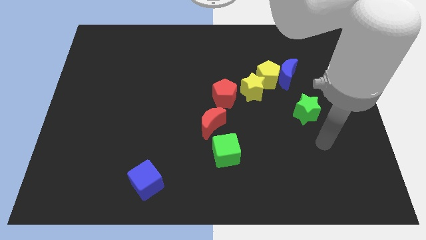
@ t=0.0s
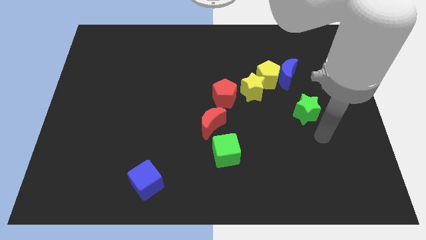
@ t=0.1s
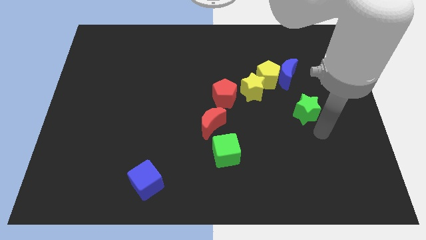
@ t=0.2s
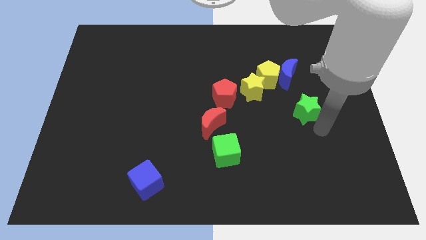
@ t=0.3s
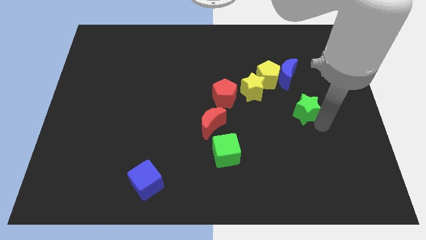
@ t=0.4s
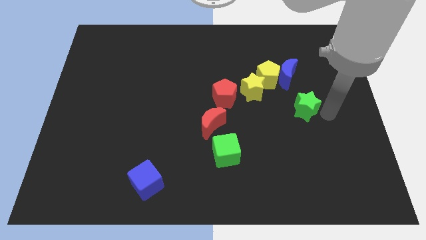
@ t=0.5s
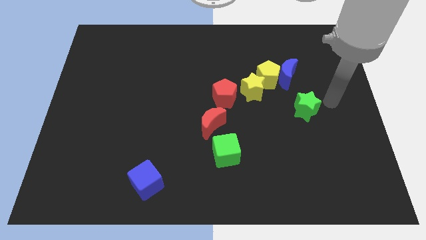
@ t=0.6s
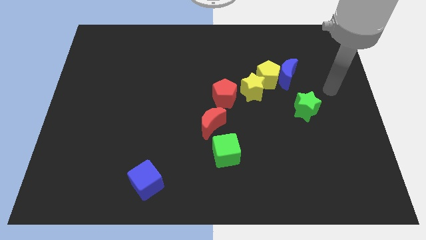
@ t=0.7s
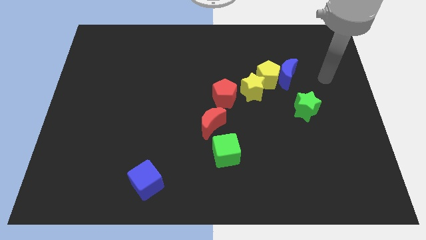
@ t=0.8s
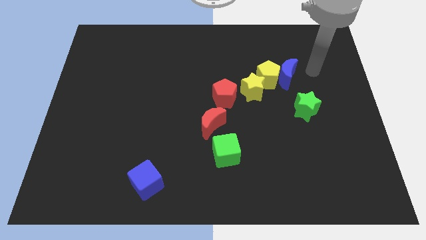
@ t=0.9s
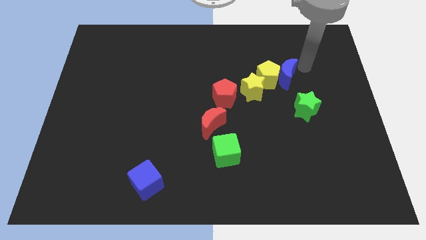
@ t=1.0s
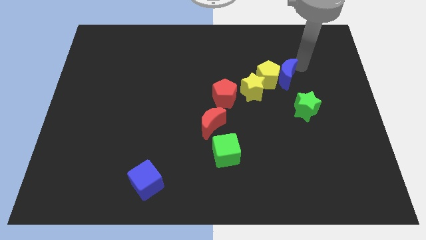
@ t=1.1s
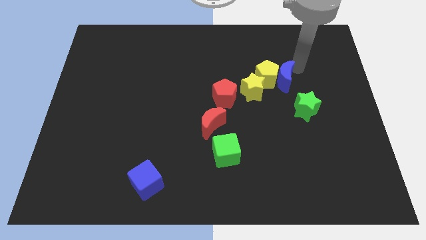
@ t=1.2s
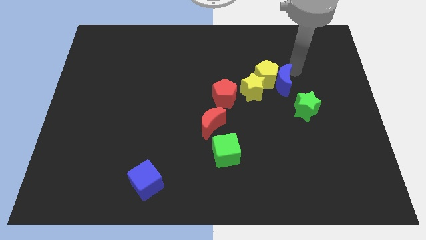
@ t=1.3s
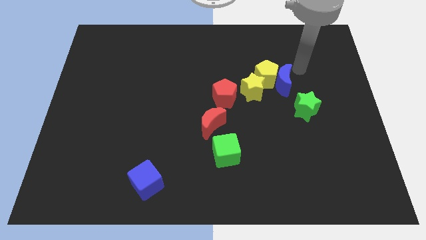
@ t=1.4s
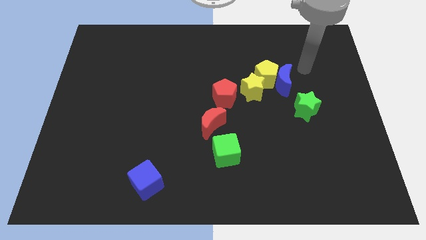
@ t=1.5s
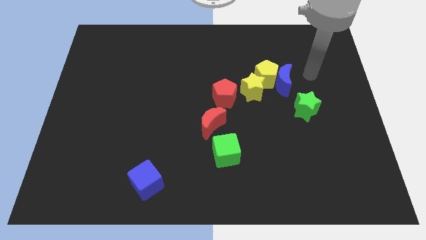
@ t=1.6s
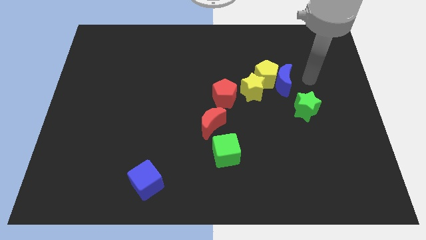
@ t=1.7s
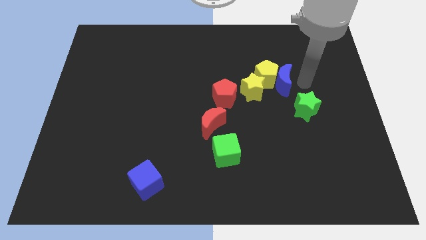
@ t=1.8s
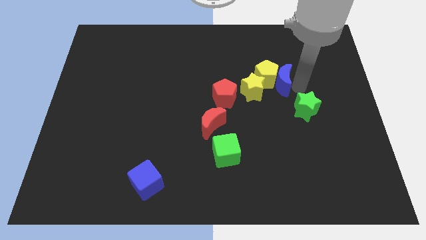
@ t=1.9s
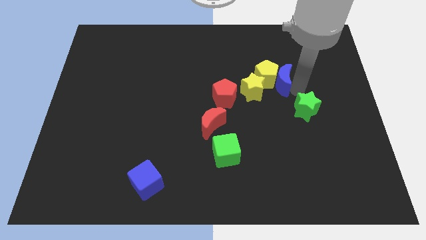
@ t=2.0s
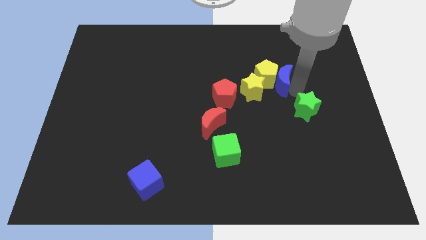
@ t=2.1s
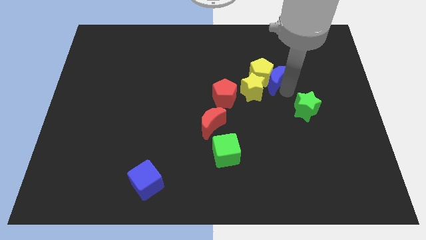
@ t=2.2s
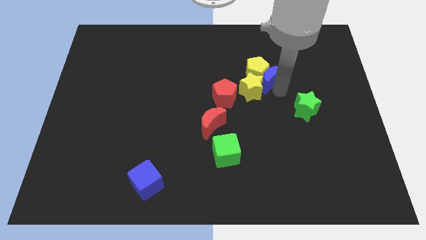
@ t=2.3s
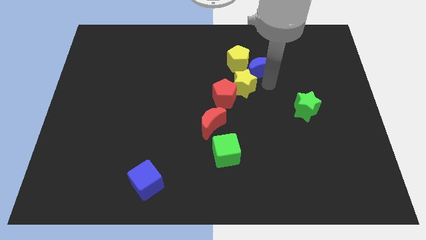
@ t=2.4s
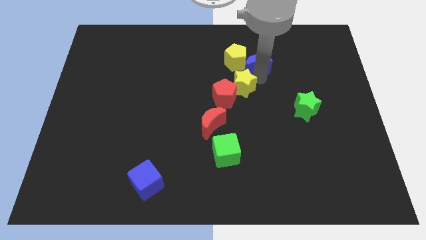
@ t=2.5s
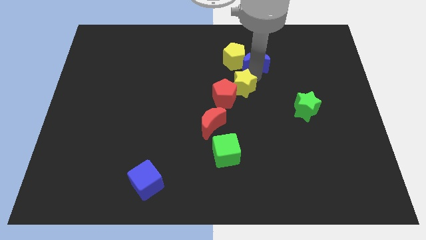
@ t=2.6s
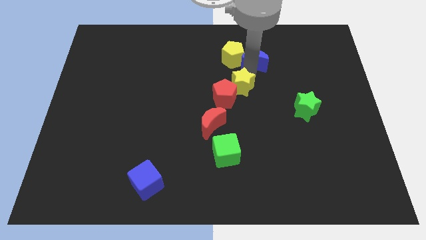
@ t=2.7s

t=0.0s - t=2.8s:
move your arm and push the blue moon between yellow blocks

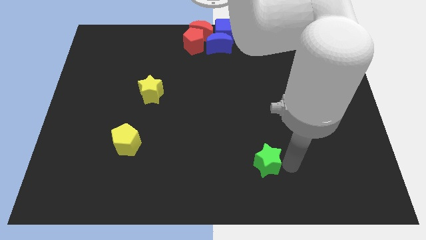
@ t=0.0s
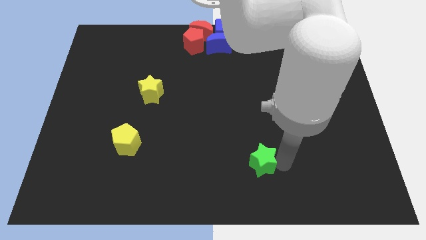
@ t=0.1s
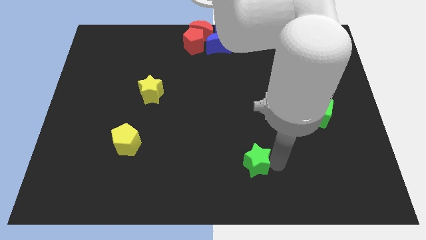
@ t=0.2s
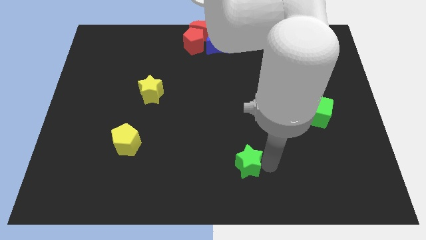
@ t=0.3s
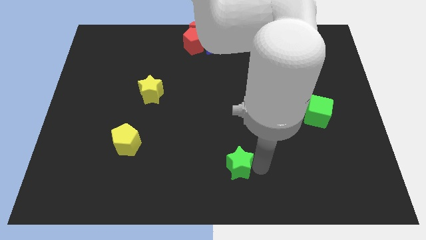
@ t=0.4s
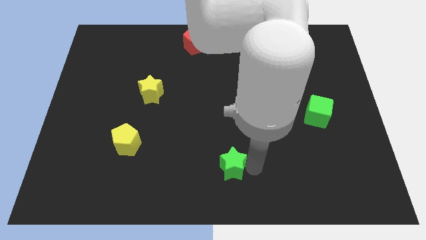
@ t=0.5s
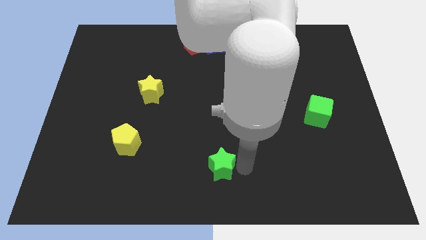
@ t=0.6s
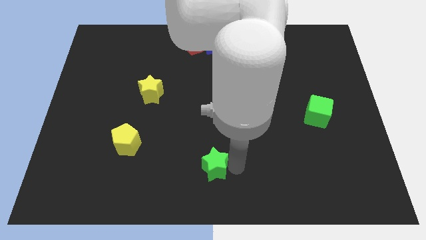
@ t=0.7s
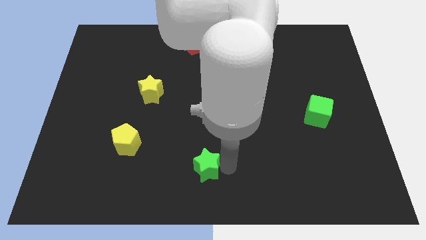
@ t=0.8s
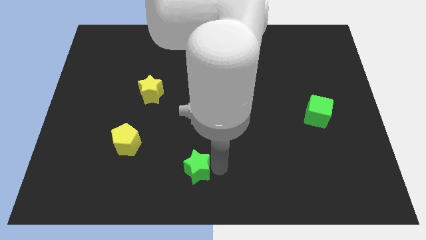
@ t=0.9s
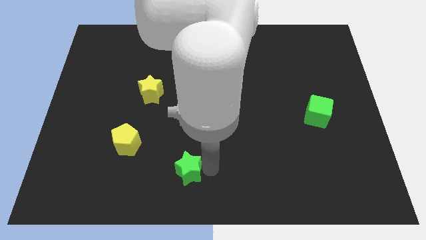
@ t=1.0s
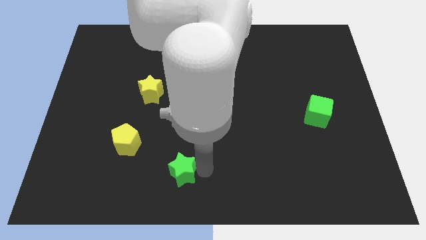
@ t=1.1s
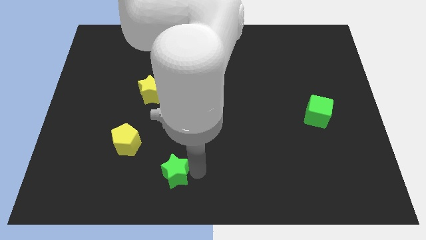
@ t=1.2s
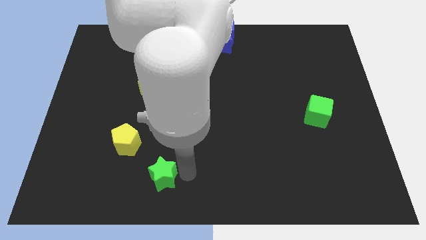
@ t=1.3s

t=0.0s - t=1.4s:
push green star diagonally right bottom of the yellow pentagon

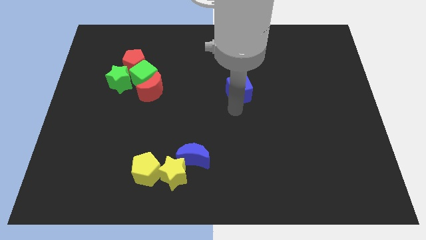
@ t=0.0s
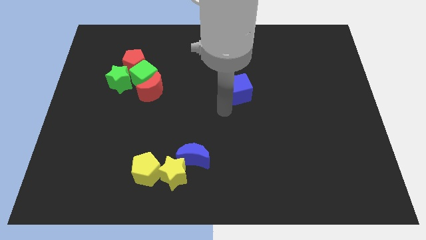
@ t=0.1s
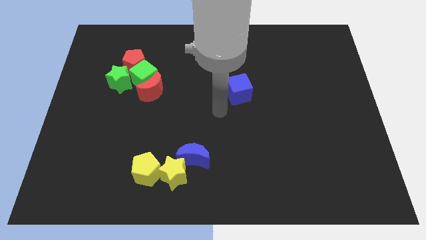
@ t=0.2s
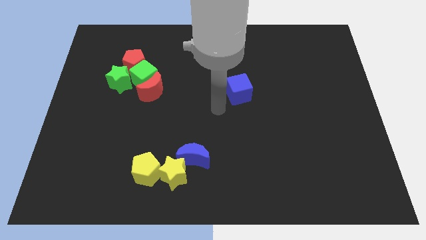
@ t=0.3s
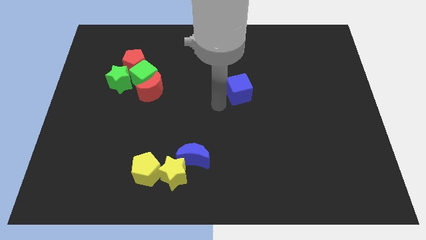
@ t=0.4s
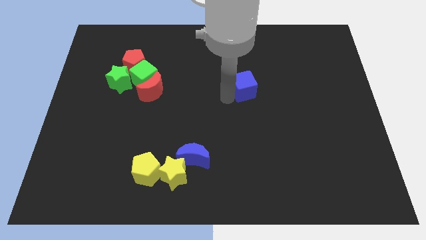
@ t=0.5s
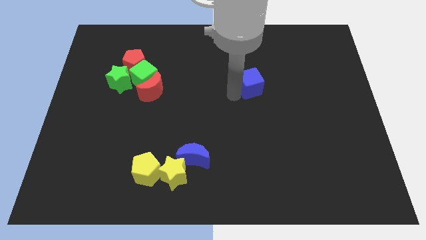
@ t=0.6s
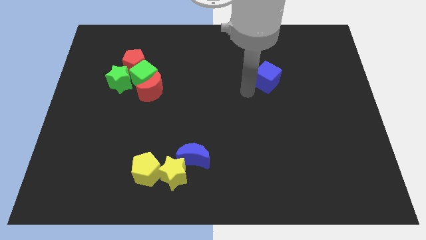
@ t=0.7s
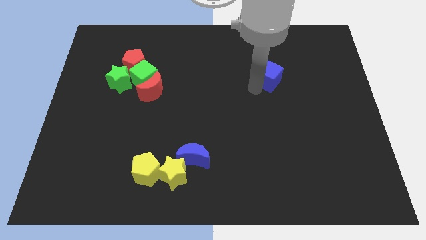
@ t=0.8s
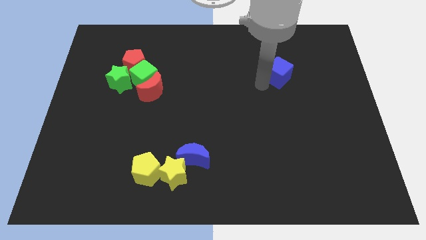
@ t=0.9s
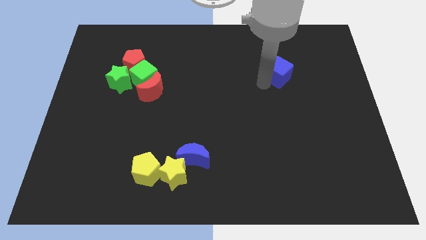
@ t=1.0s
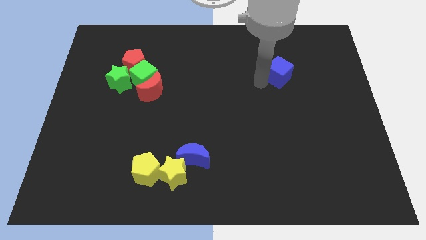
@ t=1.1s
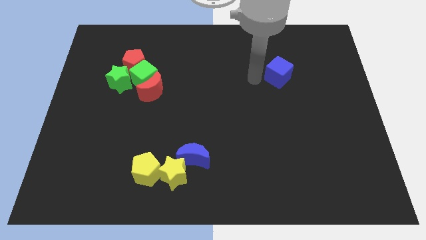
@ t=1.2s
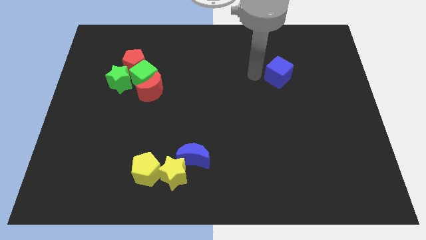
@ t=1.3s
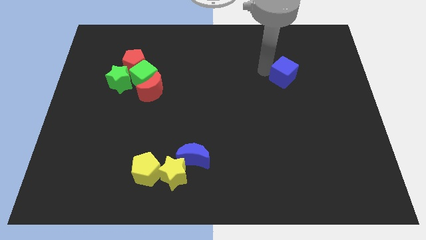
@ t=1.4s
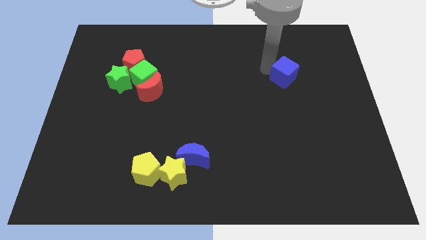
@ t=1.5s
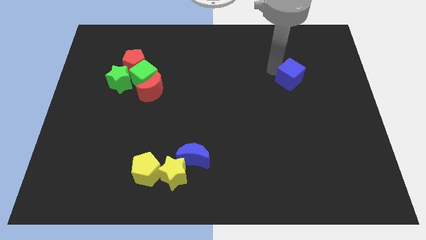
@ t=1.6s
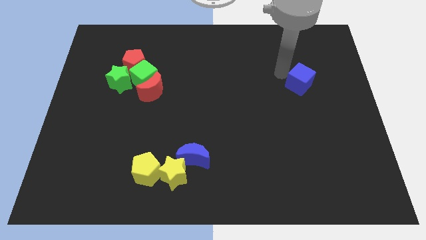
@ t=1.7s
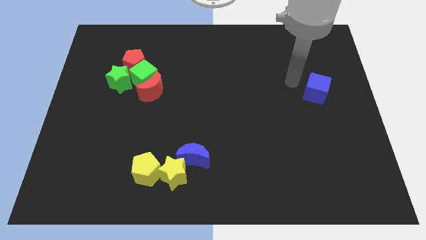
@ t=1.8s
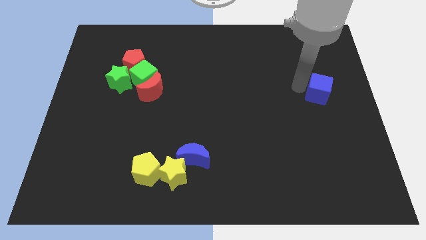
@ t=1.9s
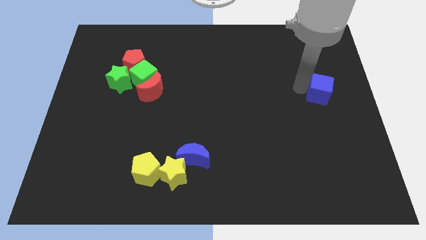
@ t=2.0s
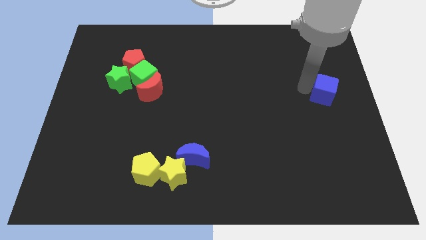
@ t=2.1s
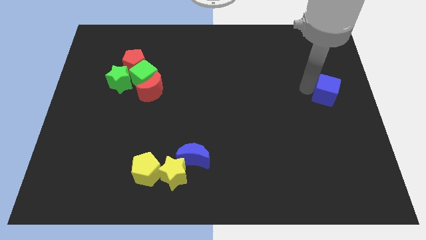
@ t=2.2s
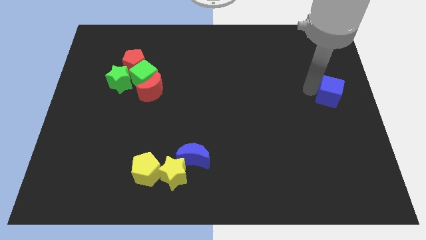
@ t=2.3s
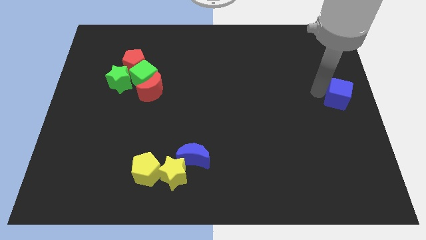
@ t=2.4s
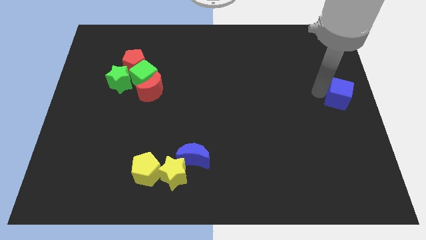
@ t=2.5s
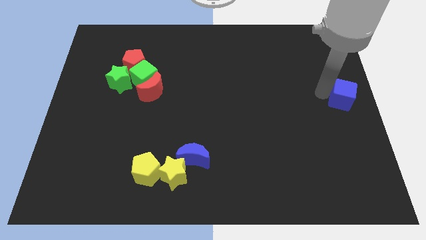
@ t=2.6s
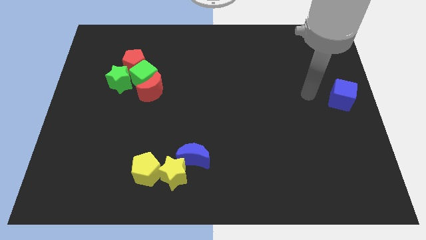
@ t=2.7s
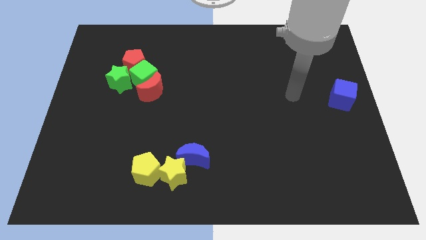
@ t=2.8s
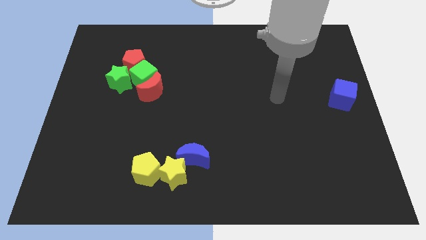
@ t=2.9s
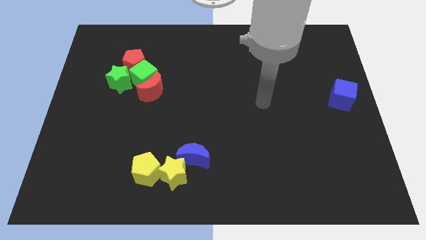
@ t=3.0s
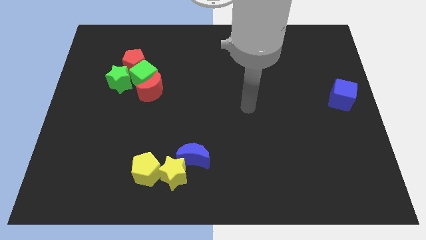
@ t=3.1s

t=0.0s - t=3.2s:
place the blue cube towards the middle right end of the board

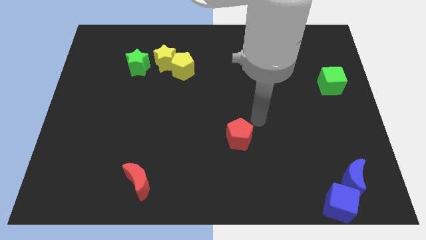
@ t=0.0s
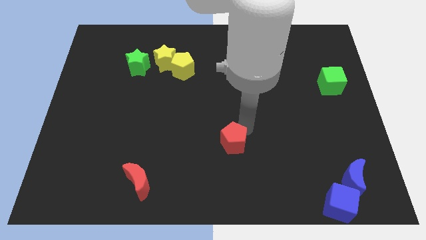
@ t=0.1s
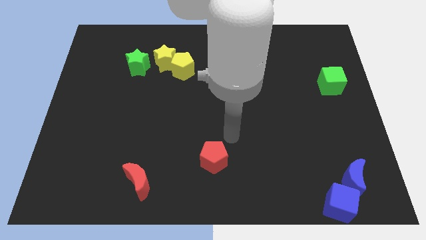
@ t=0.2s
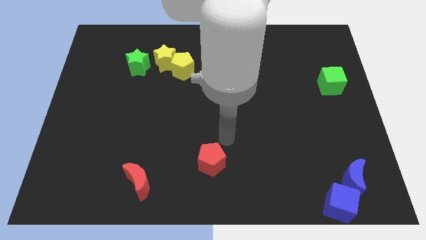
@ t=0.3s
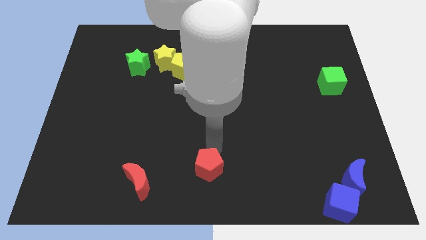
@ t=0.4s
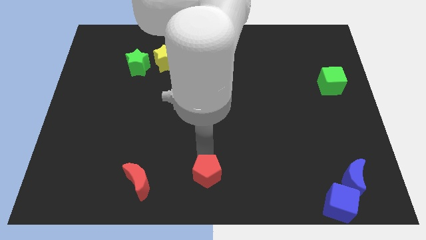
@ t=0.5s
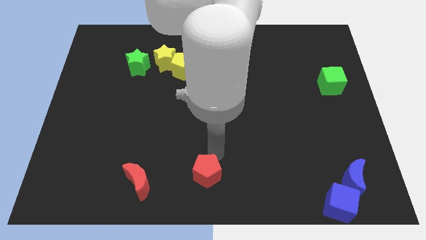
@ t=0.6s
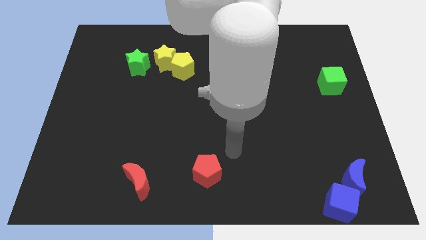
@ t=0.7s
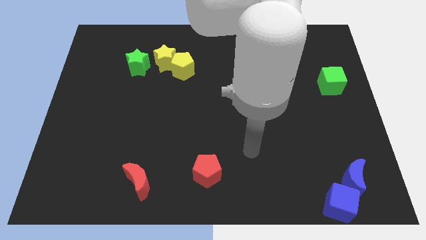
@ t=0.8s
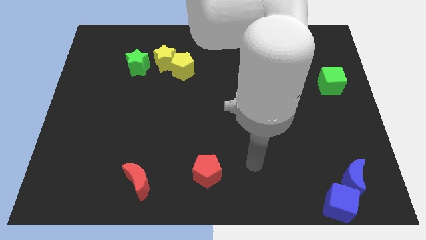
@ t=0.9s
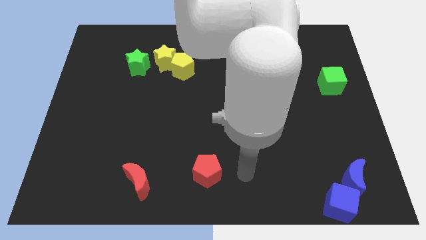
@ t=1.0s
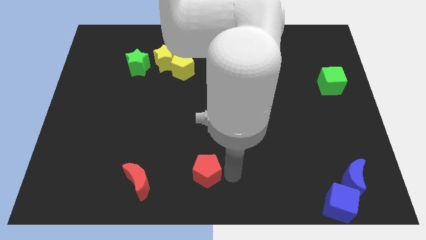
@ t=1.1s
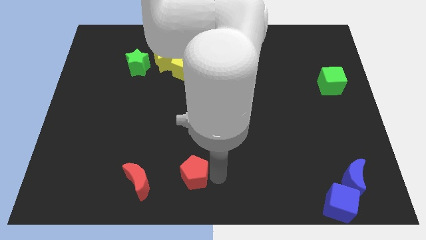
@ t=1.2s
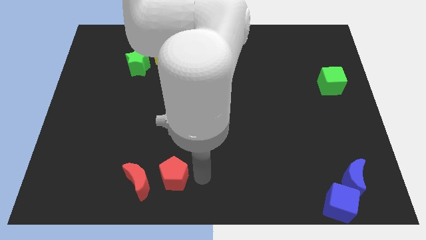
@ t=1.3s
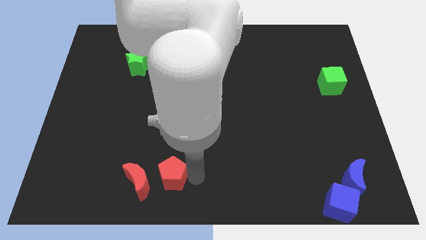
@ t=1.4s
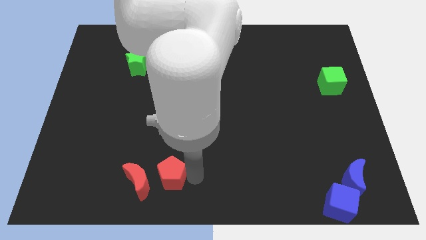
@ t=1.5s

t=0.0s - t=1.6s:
place the red pentagon to the right of the red moon
